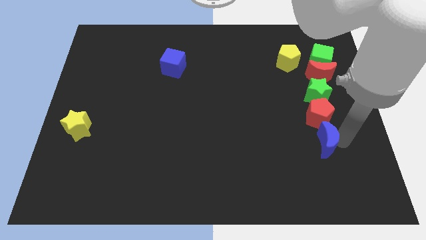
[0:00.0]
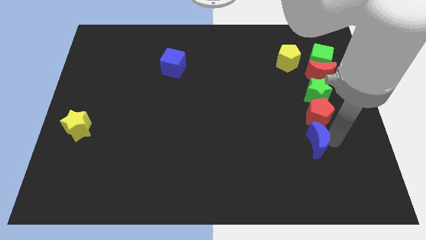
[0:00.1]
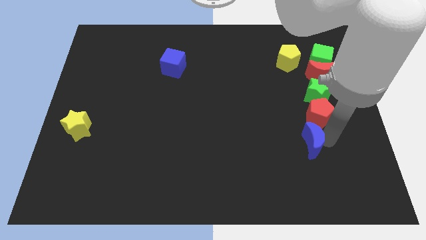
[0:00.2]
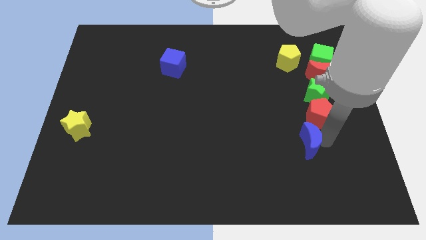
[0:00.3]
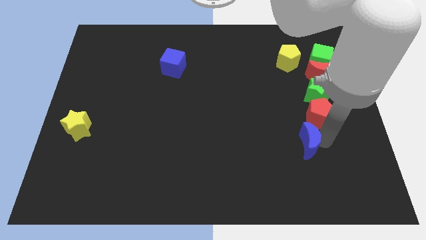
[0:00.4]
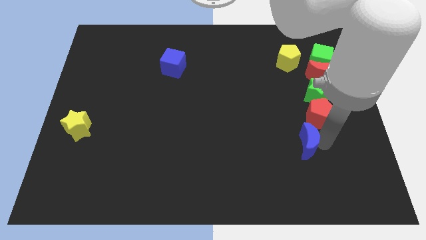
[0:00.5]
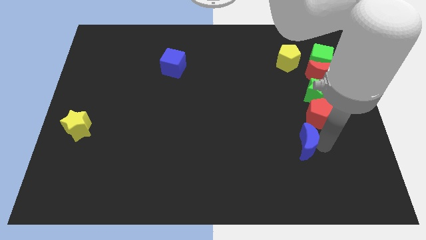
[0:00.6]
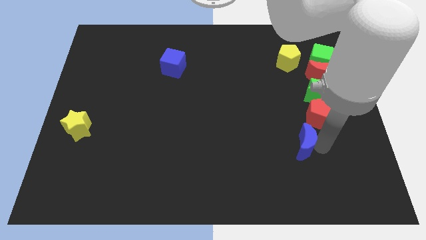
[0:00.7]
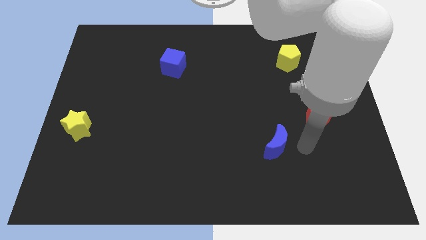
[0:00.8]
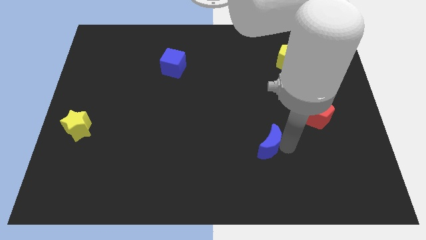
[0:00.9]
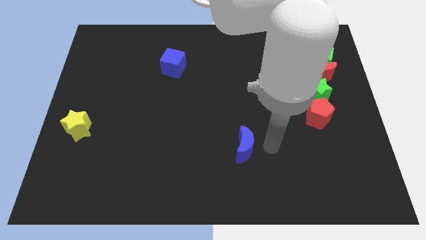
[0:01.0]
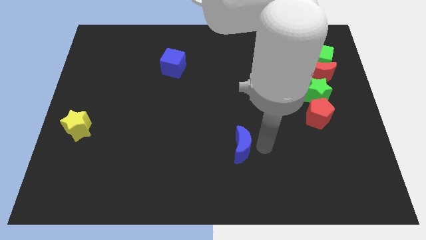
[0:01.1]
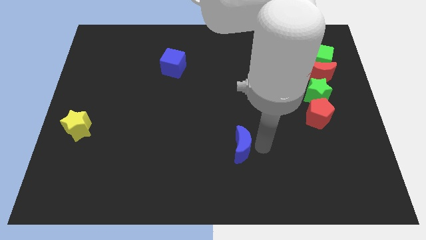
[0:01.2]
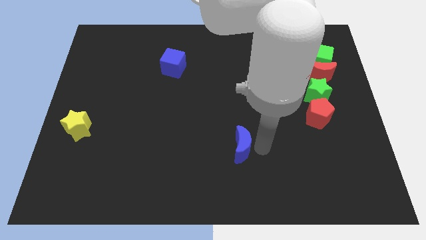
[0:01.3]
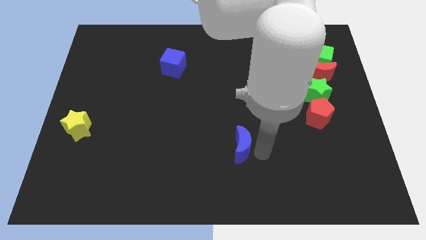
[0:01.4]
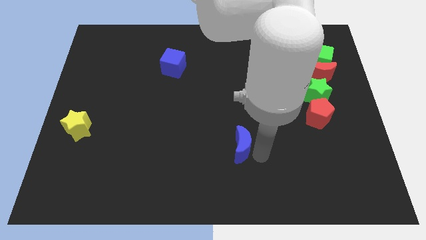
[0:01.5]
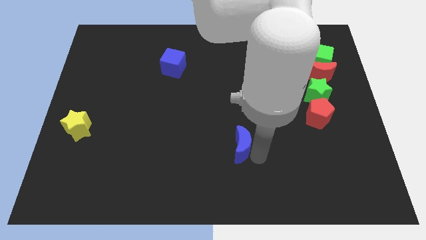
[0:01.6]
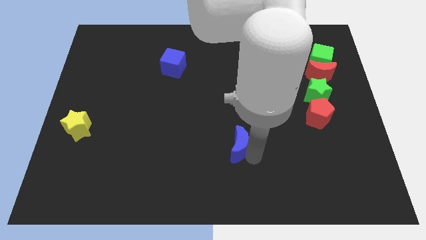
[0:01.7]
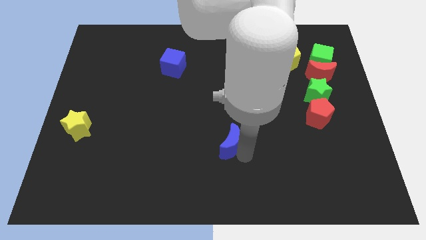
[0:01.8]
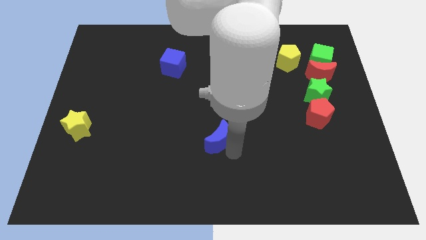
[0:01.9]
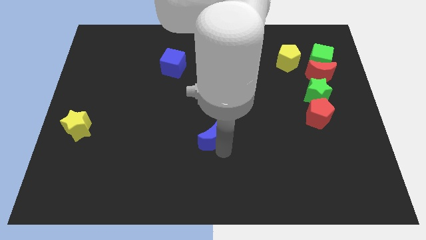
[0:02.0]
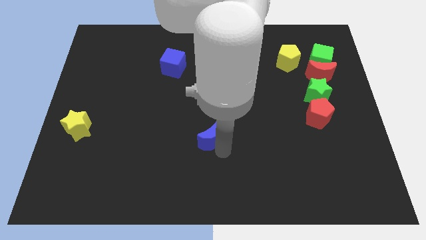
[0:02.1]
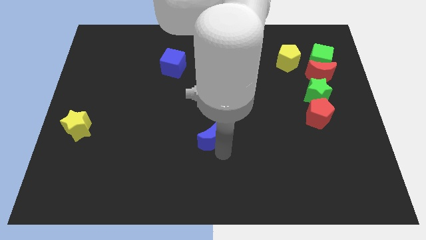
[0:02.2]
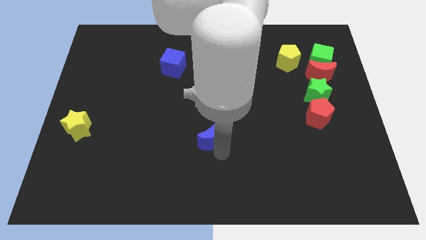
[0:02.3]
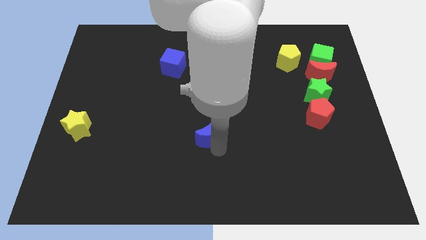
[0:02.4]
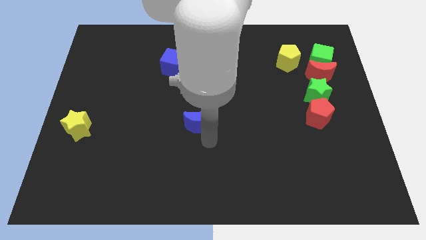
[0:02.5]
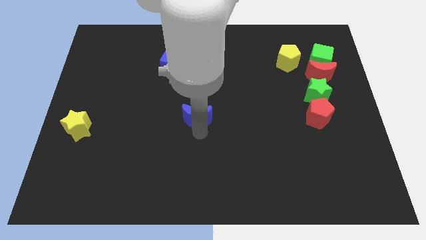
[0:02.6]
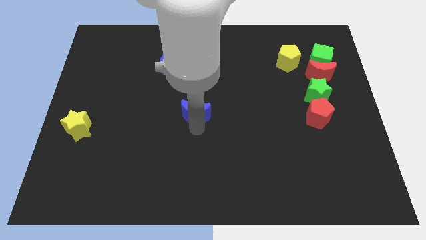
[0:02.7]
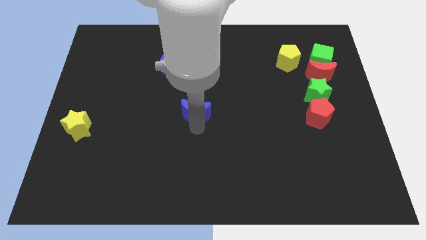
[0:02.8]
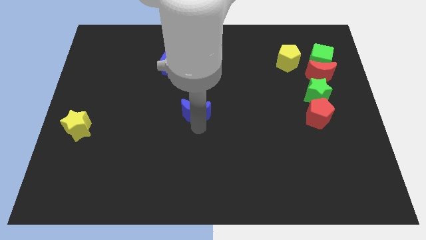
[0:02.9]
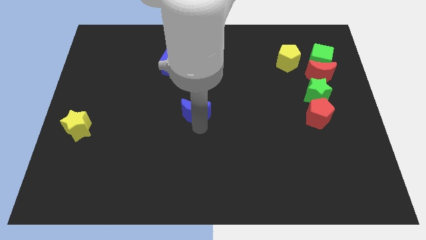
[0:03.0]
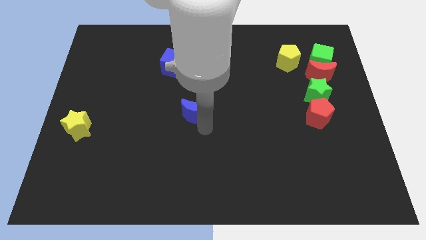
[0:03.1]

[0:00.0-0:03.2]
move blue moon towards the blue cube

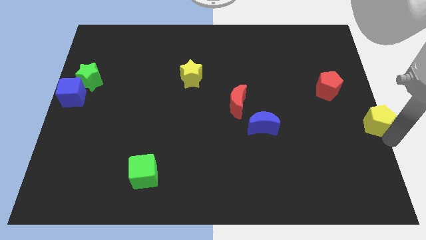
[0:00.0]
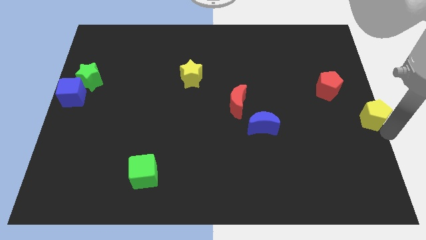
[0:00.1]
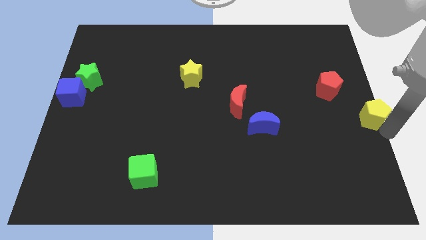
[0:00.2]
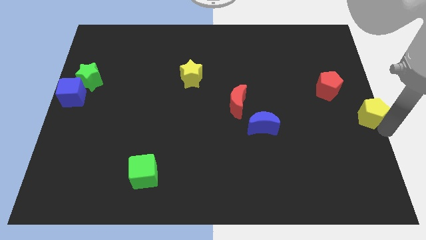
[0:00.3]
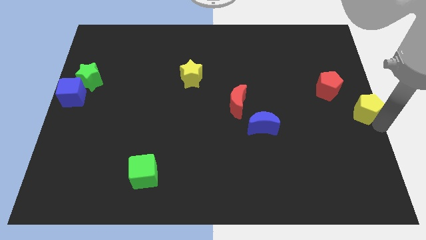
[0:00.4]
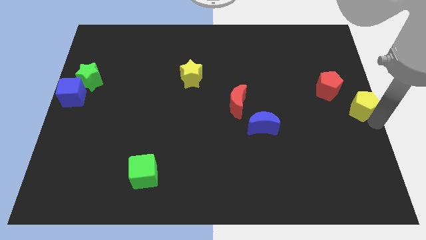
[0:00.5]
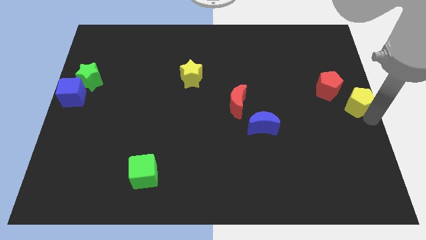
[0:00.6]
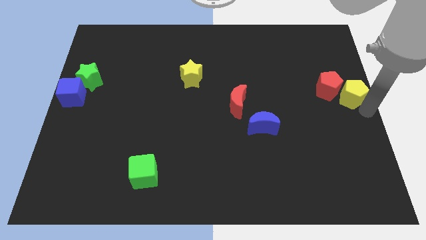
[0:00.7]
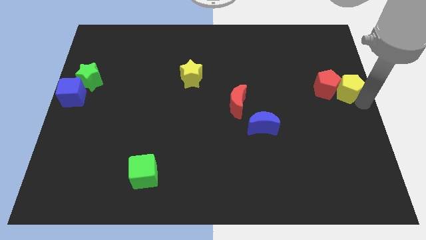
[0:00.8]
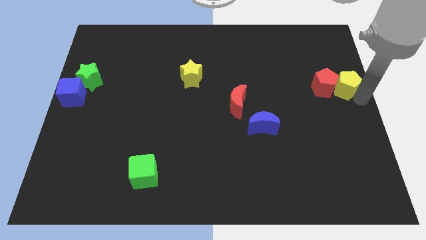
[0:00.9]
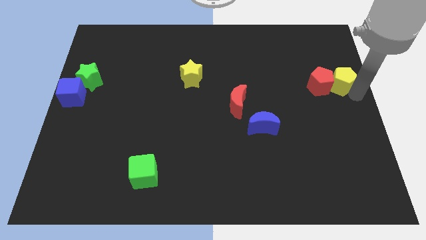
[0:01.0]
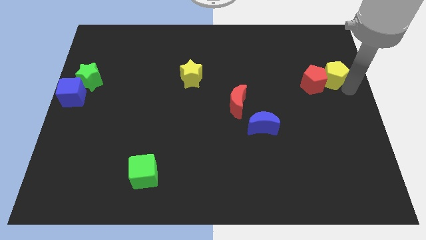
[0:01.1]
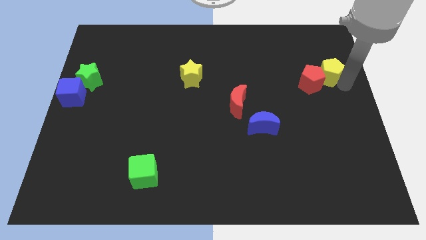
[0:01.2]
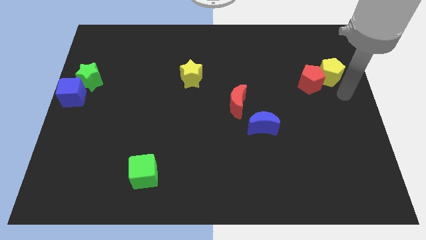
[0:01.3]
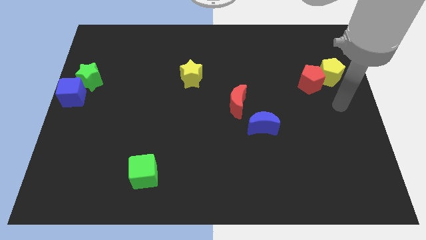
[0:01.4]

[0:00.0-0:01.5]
push the yellow pentagon into red pentagon

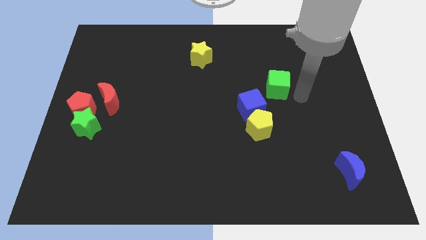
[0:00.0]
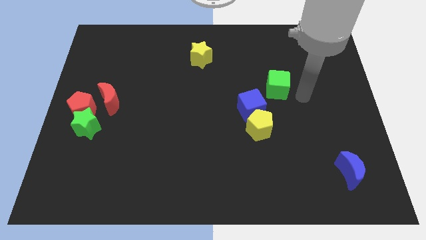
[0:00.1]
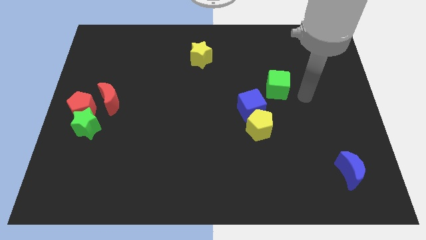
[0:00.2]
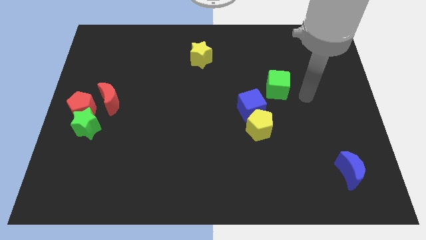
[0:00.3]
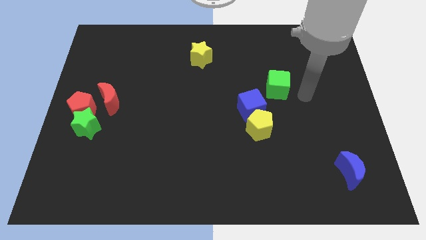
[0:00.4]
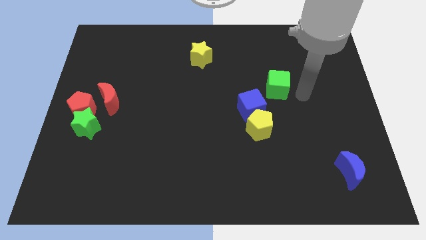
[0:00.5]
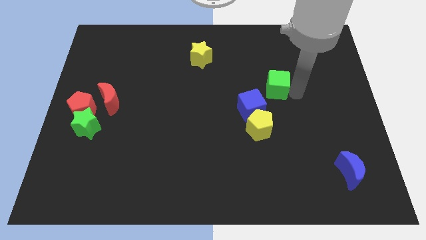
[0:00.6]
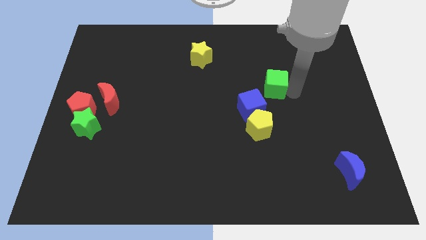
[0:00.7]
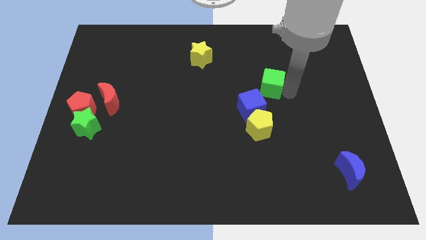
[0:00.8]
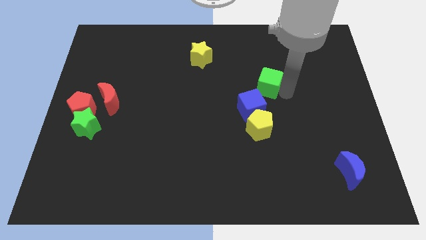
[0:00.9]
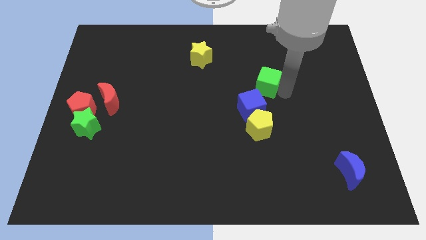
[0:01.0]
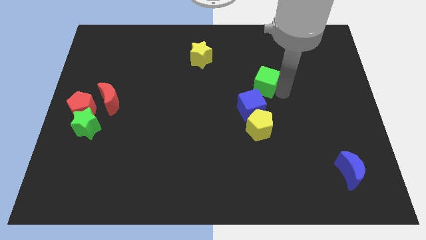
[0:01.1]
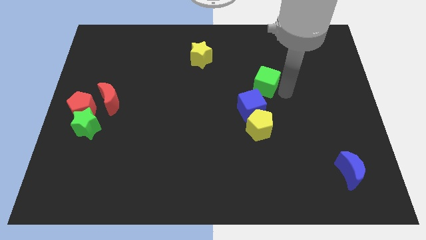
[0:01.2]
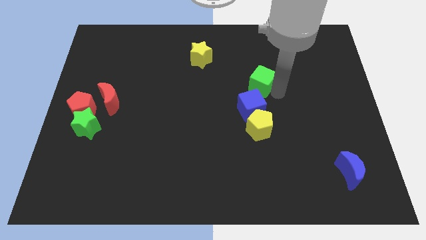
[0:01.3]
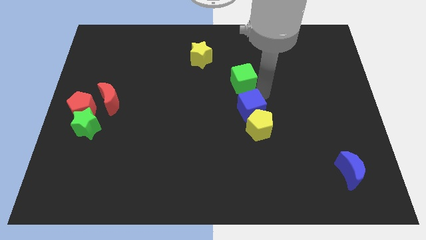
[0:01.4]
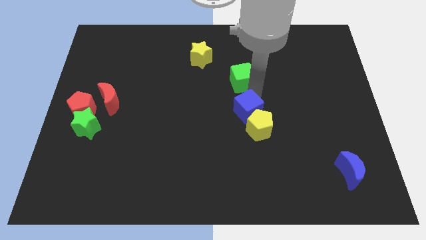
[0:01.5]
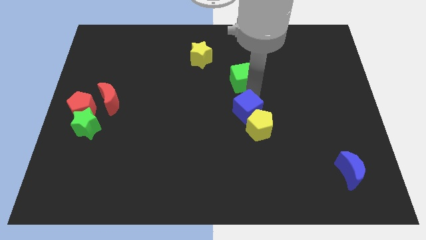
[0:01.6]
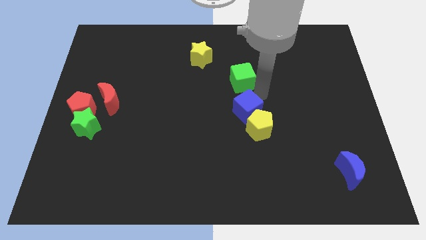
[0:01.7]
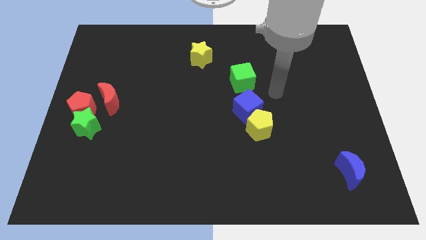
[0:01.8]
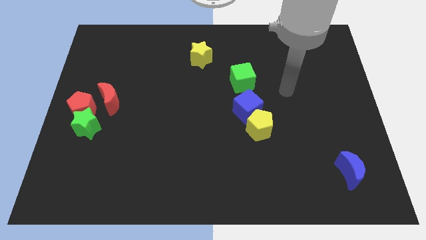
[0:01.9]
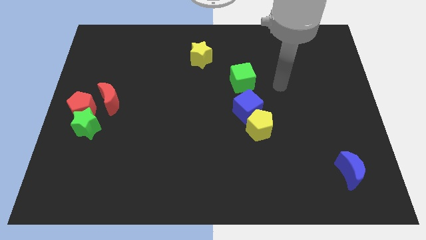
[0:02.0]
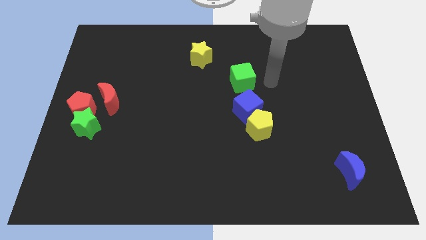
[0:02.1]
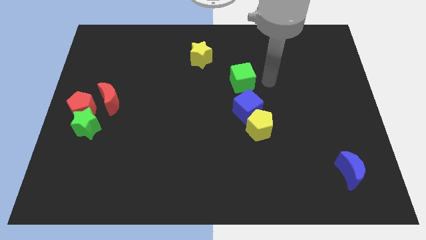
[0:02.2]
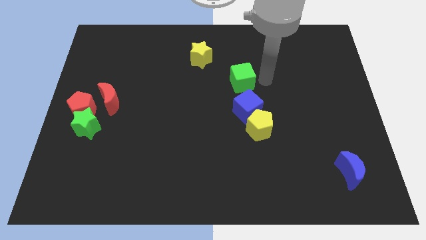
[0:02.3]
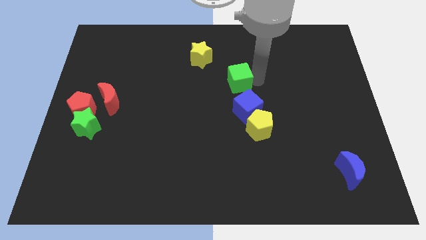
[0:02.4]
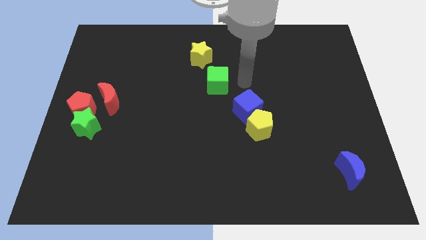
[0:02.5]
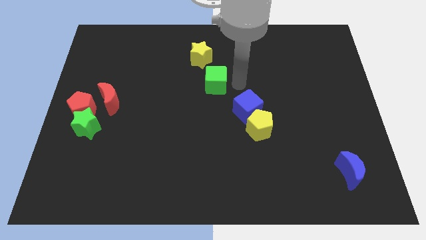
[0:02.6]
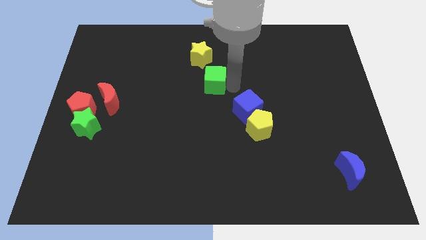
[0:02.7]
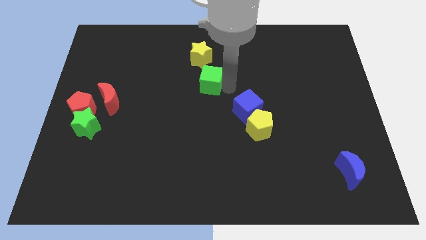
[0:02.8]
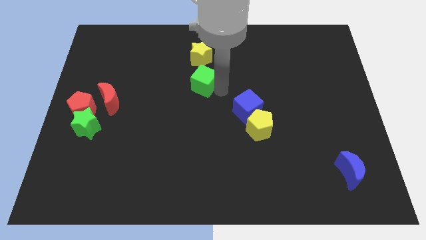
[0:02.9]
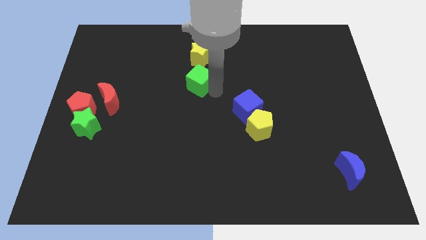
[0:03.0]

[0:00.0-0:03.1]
push green cube below yellow star

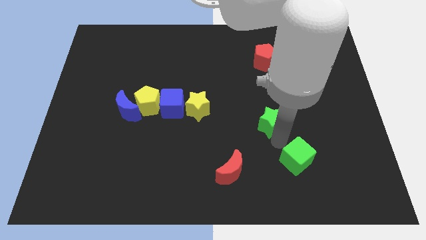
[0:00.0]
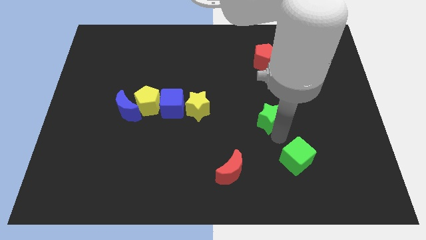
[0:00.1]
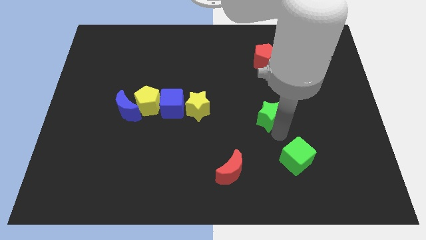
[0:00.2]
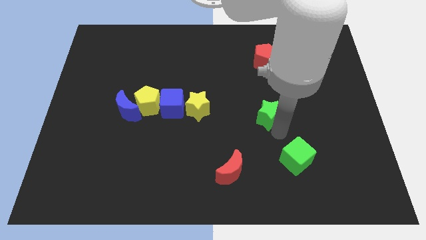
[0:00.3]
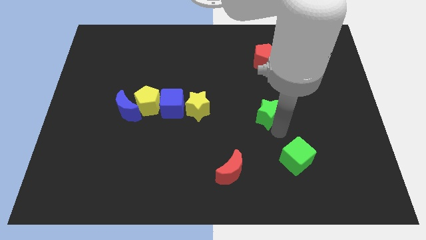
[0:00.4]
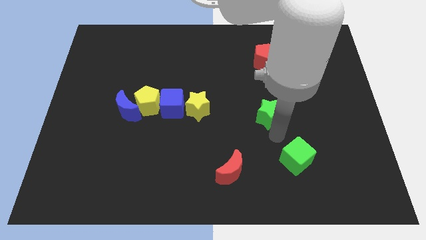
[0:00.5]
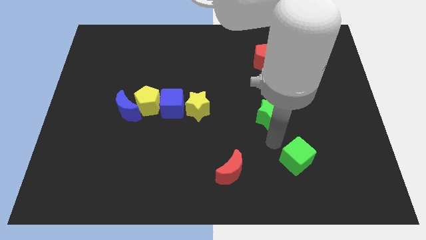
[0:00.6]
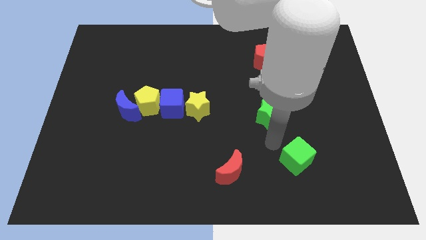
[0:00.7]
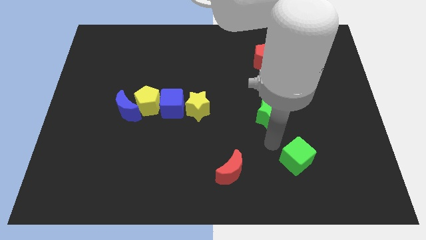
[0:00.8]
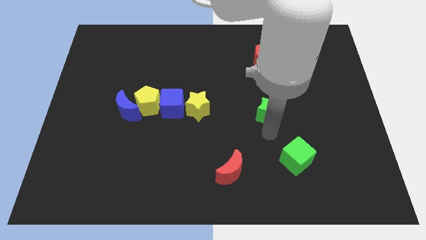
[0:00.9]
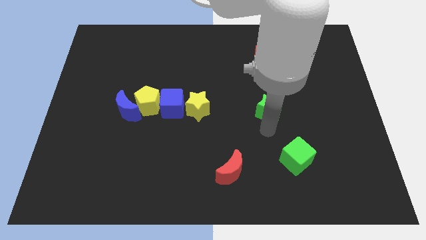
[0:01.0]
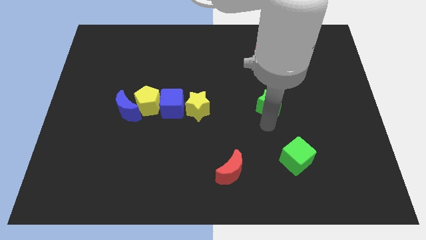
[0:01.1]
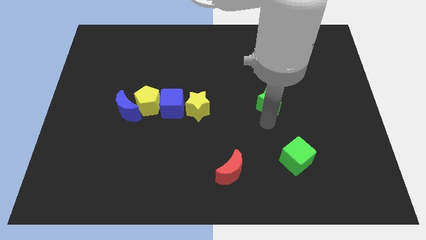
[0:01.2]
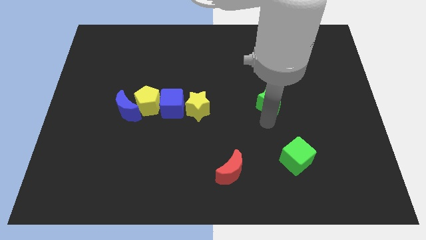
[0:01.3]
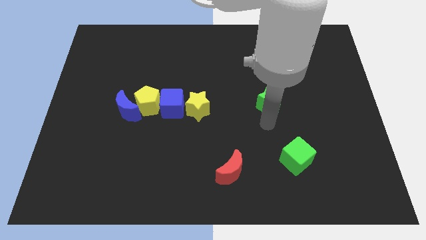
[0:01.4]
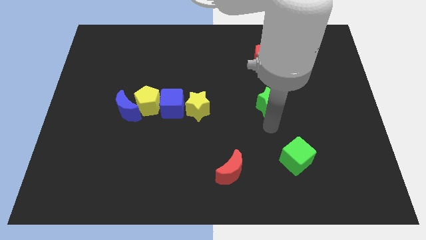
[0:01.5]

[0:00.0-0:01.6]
push the green star towards top
